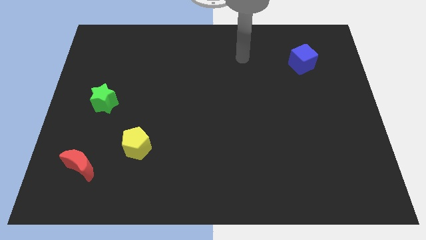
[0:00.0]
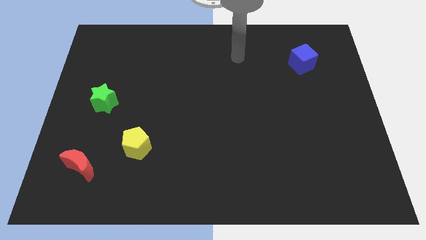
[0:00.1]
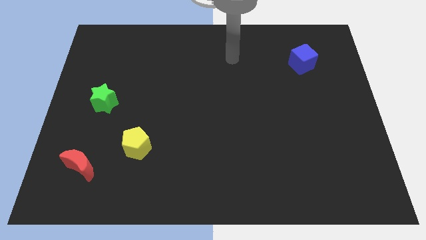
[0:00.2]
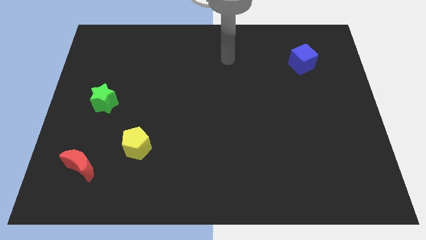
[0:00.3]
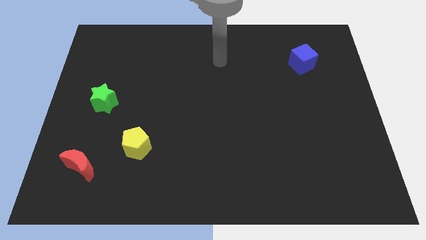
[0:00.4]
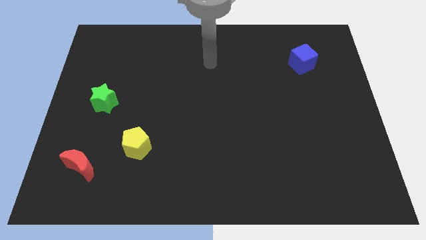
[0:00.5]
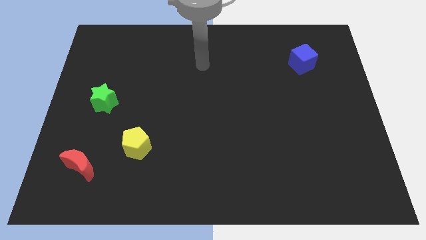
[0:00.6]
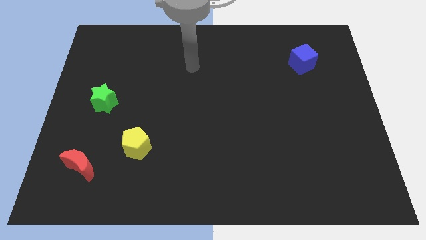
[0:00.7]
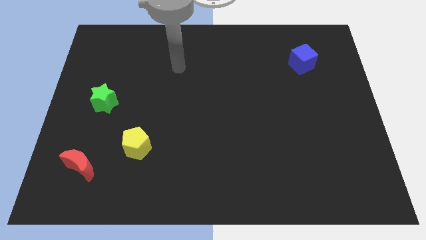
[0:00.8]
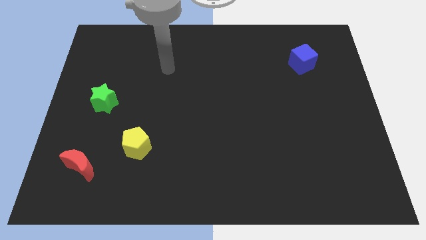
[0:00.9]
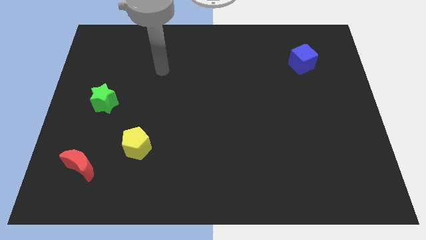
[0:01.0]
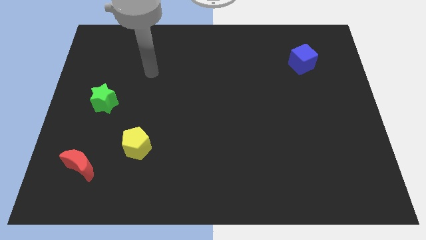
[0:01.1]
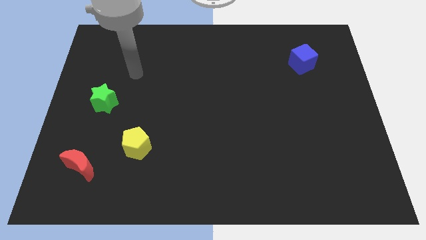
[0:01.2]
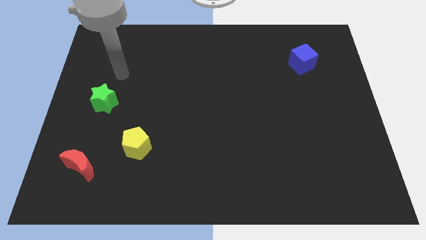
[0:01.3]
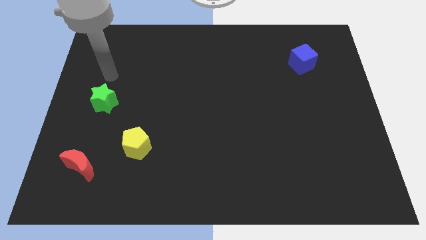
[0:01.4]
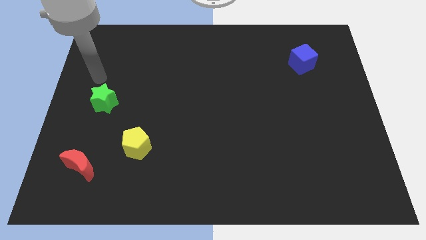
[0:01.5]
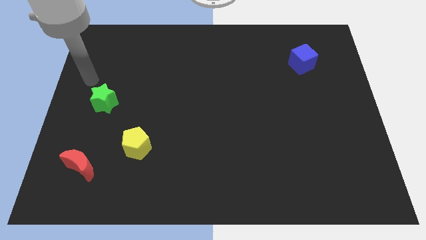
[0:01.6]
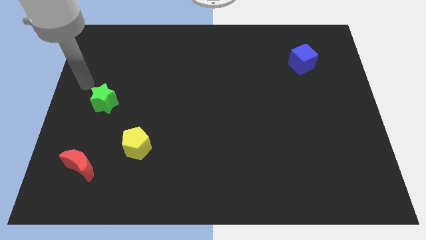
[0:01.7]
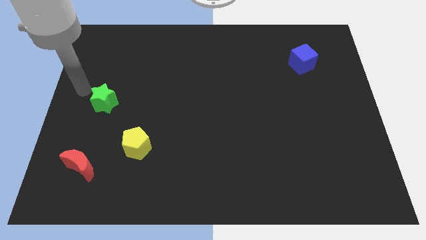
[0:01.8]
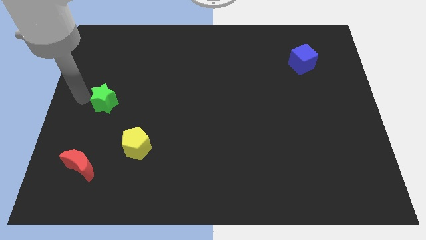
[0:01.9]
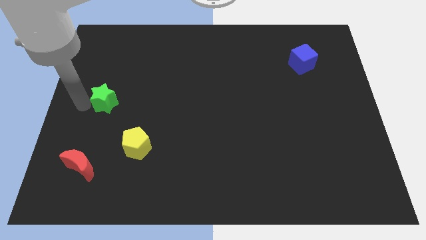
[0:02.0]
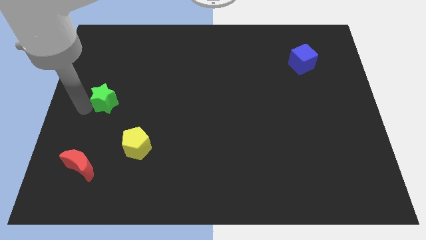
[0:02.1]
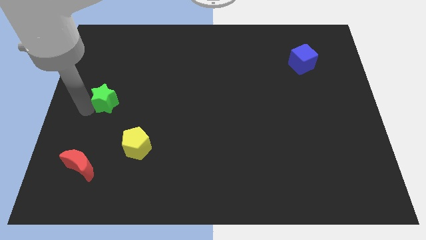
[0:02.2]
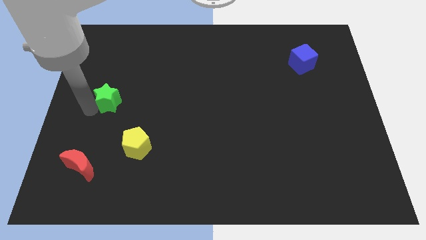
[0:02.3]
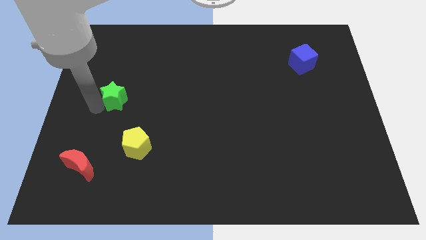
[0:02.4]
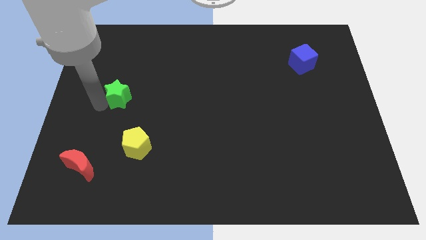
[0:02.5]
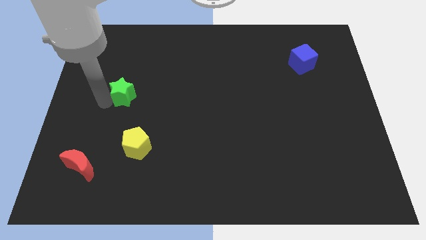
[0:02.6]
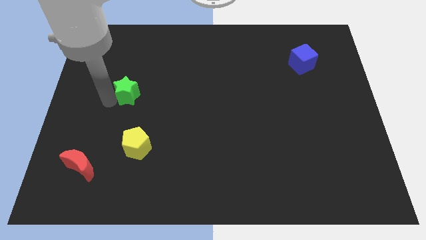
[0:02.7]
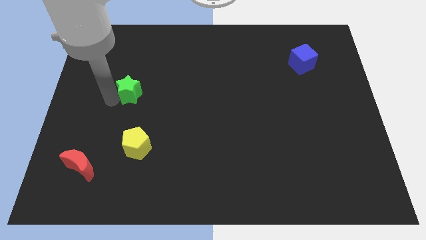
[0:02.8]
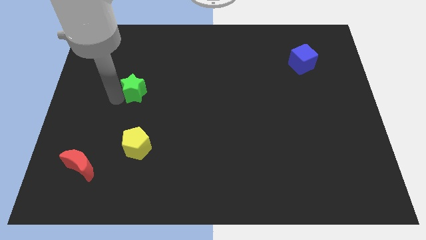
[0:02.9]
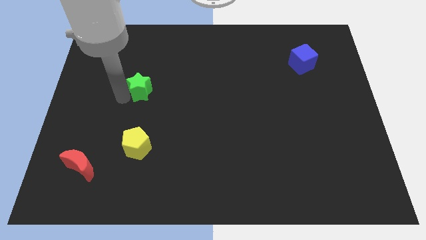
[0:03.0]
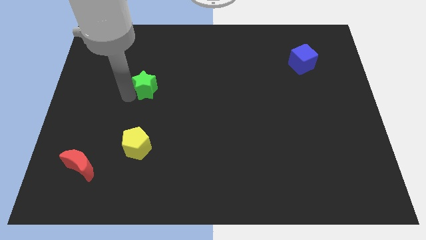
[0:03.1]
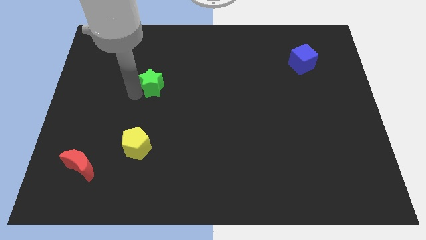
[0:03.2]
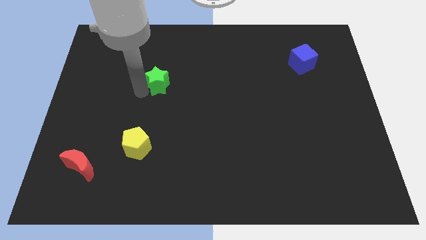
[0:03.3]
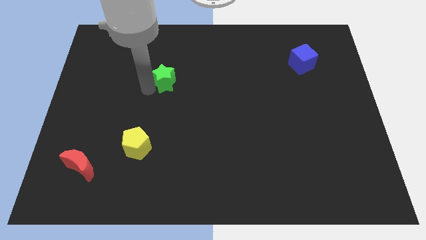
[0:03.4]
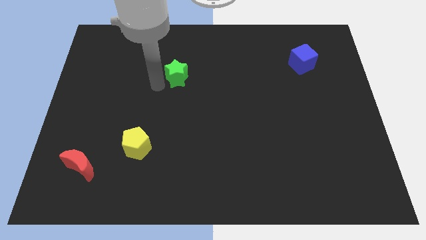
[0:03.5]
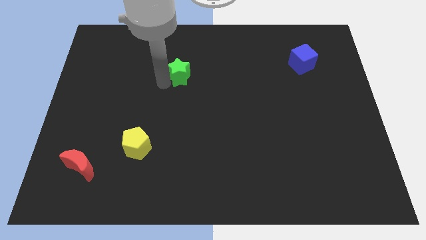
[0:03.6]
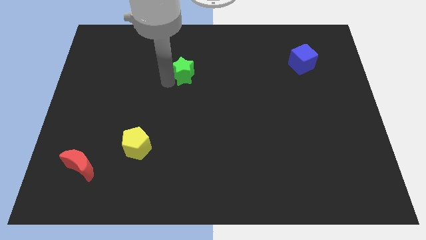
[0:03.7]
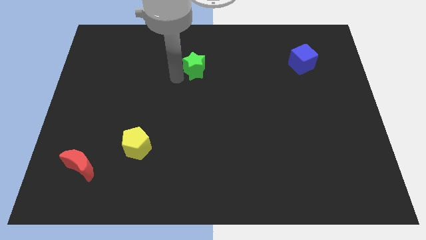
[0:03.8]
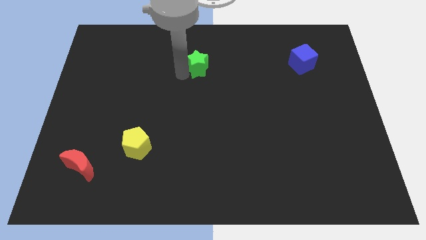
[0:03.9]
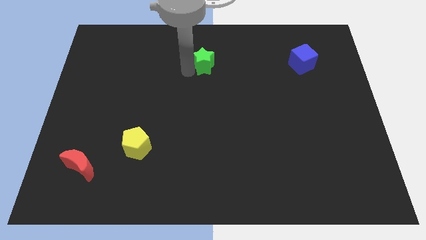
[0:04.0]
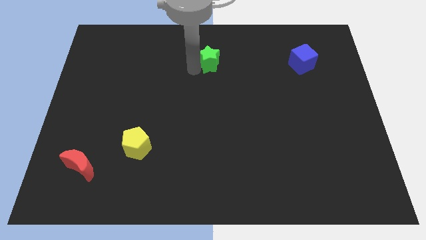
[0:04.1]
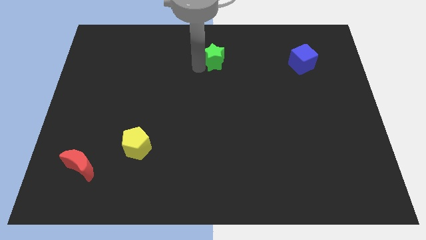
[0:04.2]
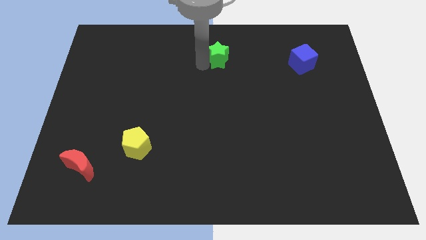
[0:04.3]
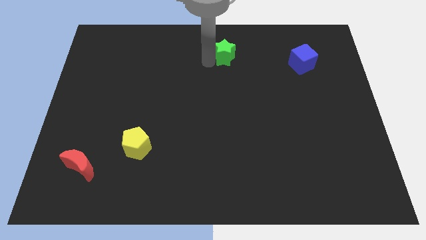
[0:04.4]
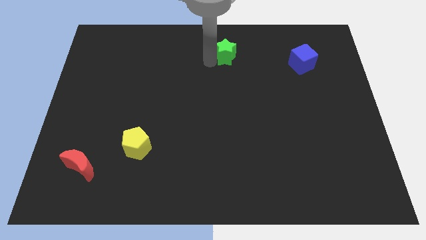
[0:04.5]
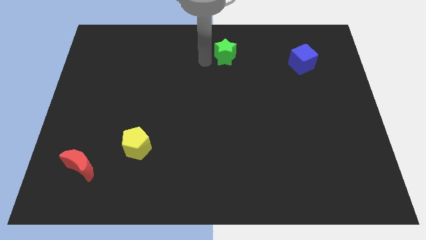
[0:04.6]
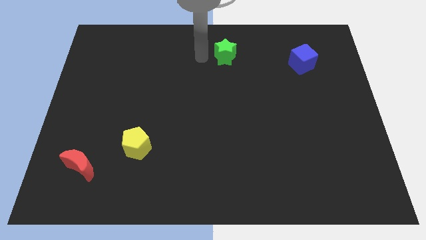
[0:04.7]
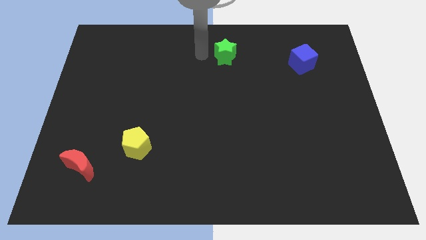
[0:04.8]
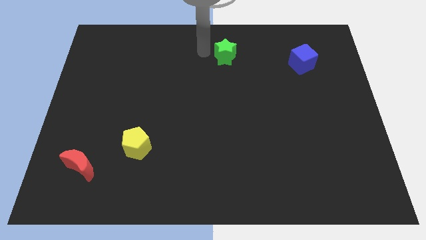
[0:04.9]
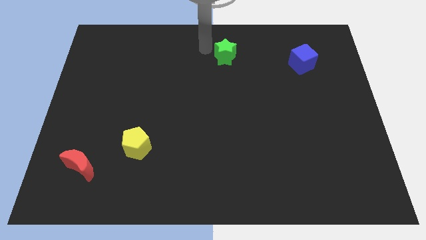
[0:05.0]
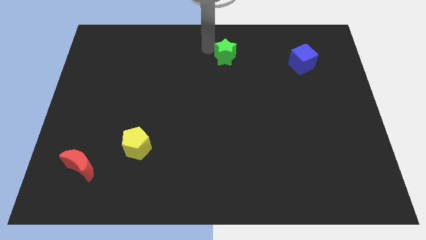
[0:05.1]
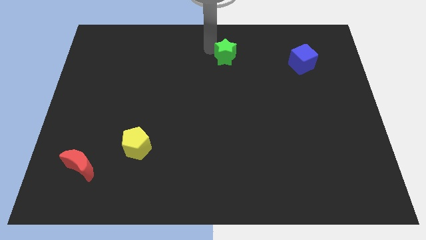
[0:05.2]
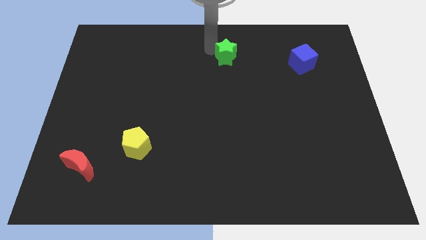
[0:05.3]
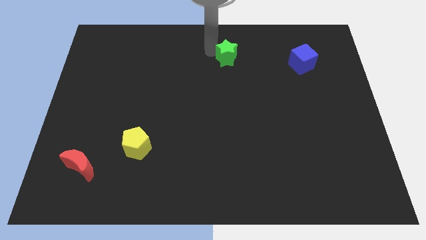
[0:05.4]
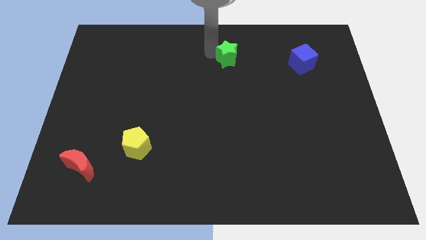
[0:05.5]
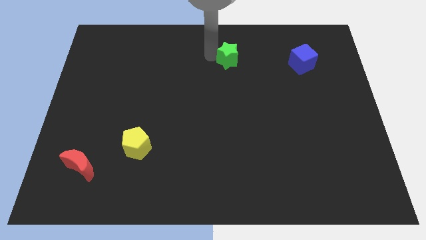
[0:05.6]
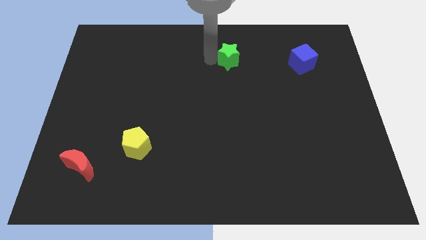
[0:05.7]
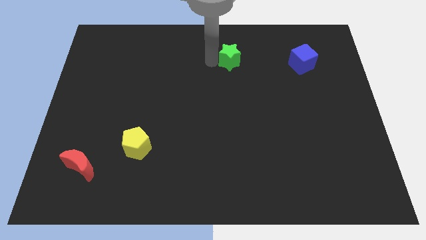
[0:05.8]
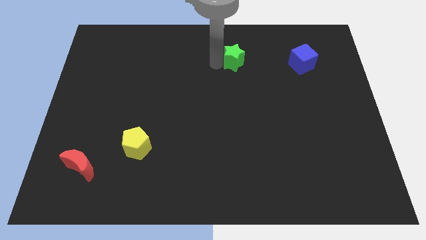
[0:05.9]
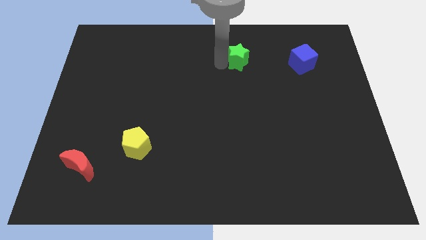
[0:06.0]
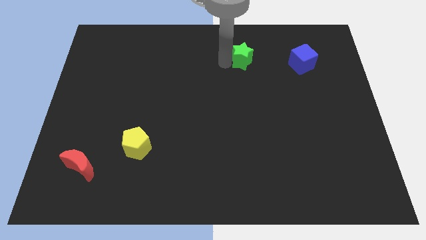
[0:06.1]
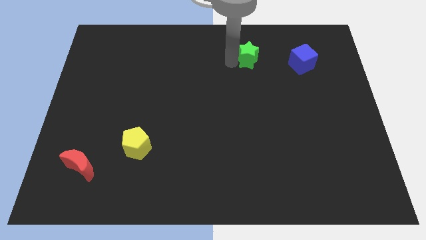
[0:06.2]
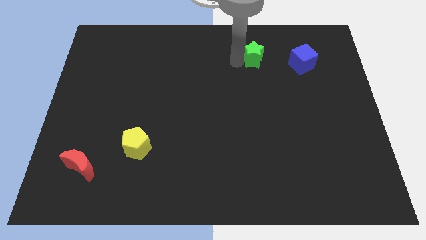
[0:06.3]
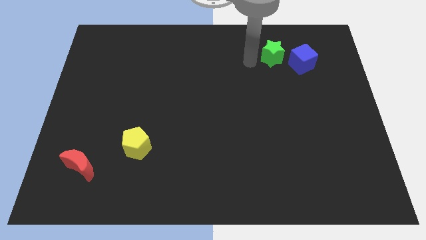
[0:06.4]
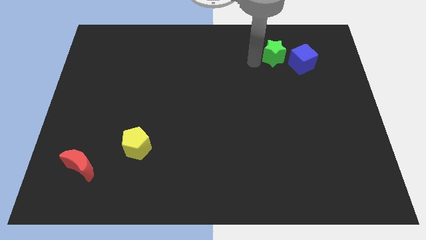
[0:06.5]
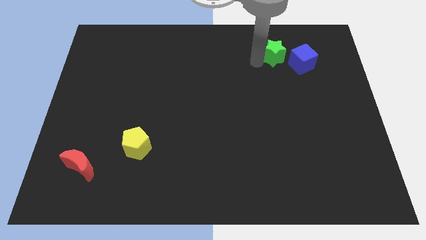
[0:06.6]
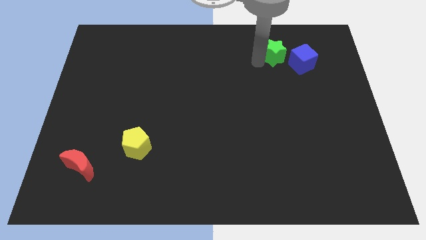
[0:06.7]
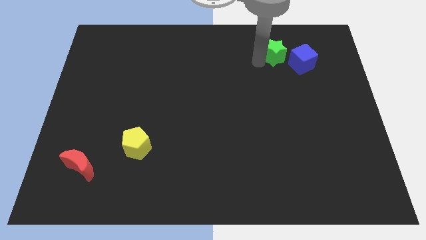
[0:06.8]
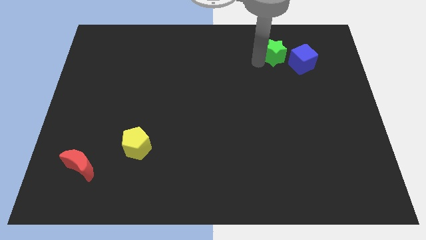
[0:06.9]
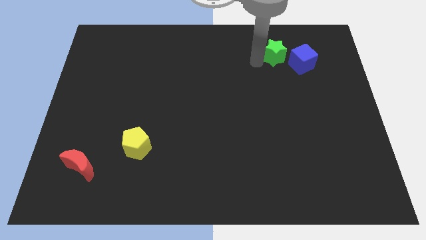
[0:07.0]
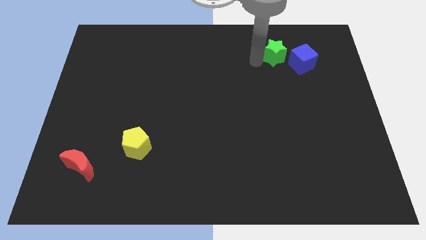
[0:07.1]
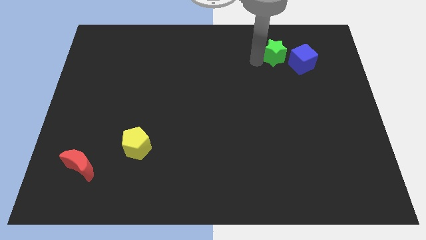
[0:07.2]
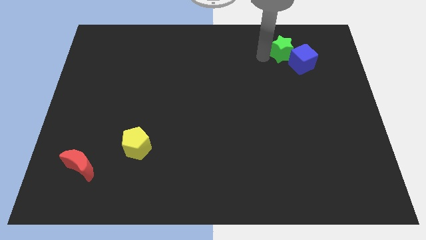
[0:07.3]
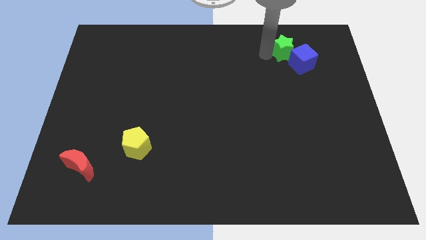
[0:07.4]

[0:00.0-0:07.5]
move the green block next to the blue block

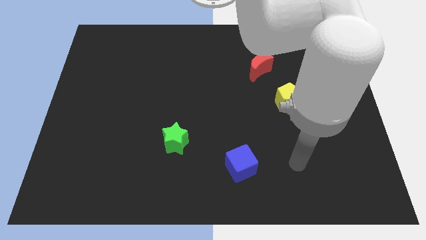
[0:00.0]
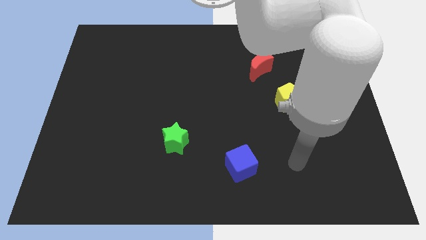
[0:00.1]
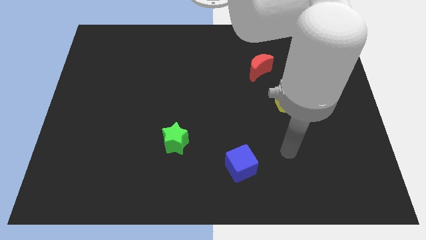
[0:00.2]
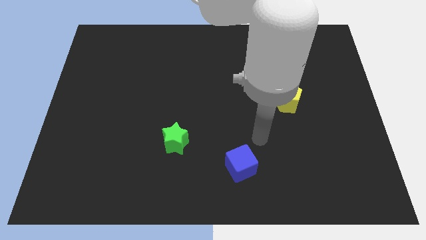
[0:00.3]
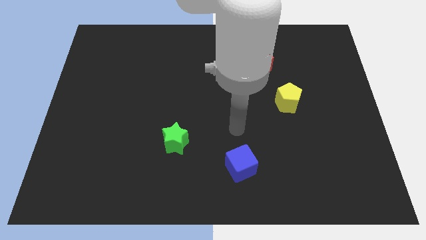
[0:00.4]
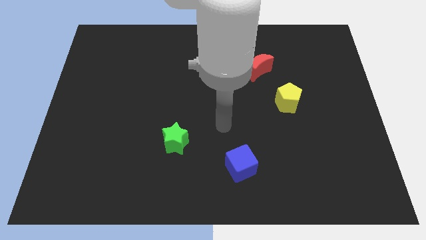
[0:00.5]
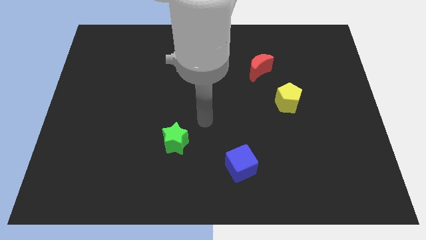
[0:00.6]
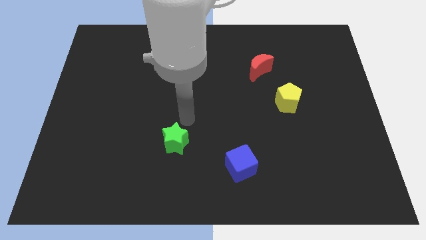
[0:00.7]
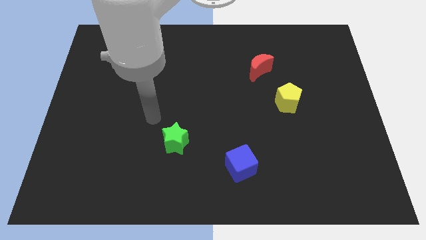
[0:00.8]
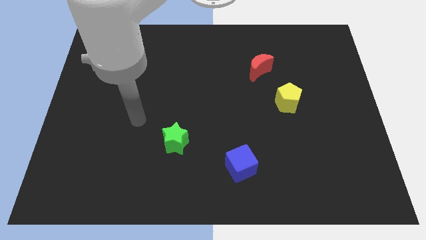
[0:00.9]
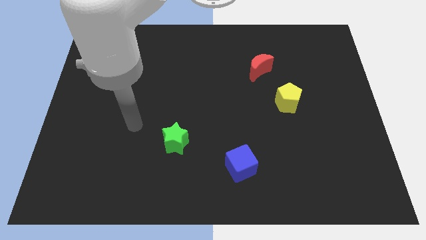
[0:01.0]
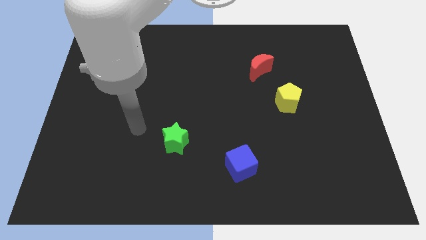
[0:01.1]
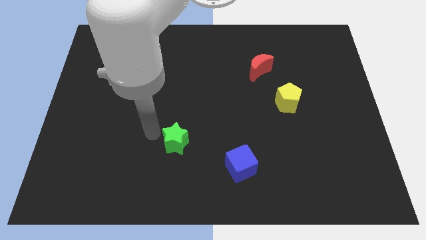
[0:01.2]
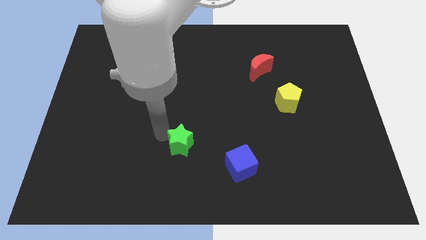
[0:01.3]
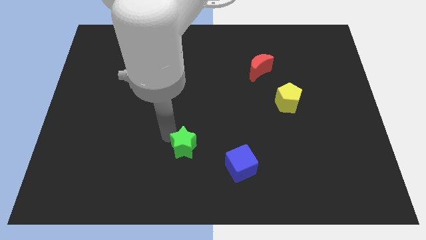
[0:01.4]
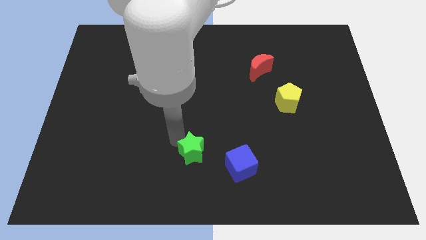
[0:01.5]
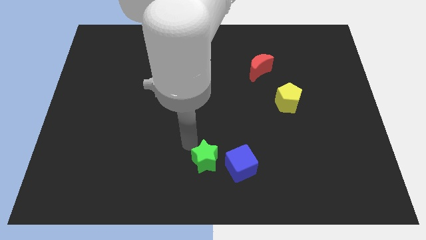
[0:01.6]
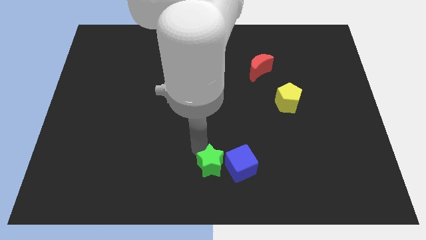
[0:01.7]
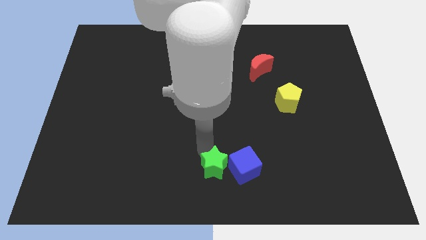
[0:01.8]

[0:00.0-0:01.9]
push the green block next to the cube
